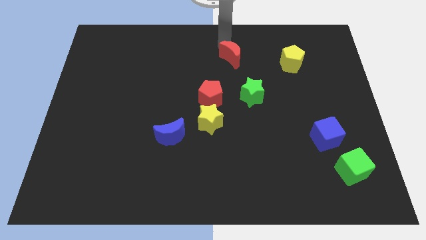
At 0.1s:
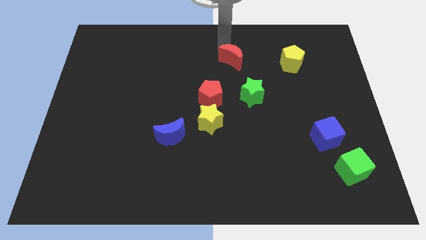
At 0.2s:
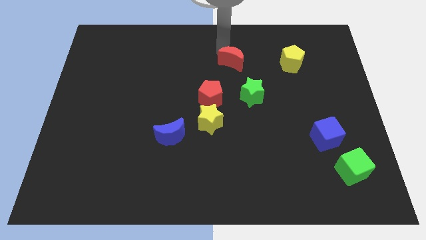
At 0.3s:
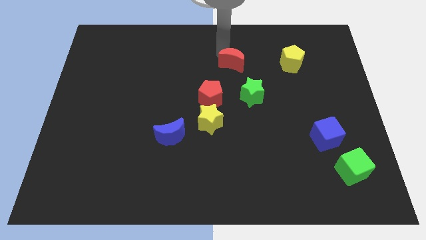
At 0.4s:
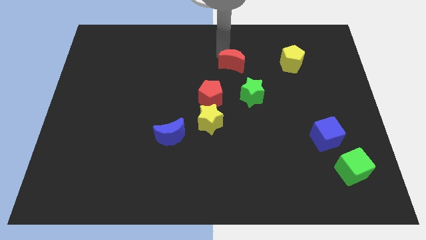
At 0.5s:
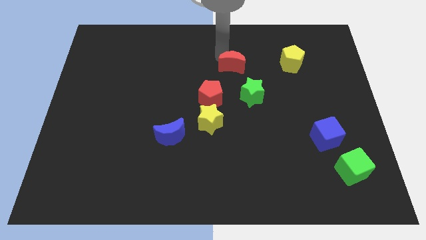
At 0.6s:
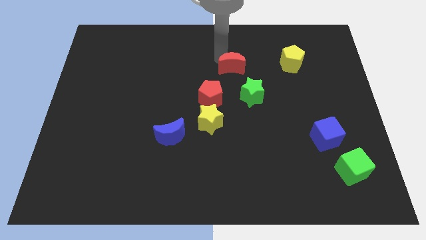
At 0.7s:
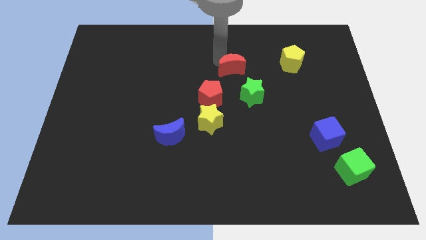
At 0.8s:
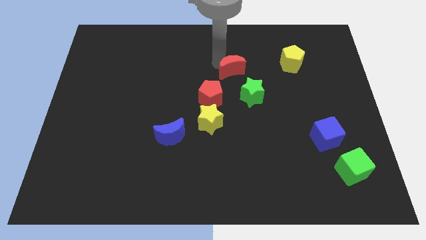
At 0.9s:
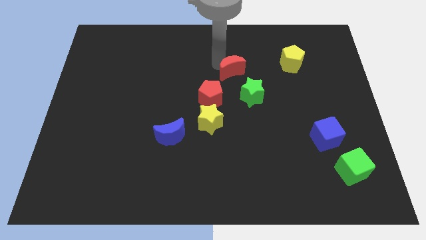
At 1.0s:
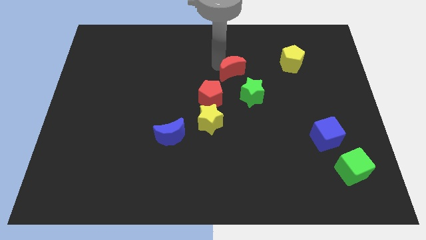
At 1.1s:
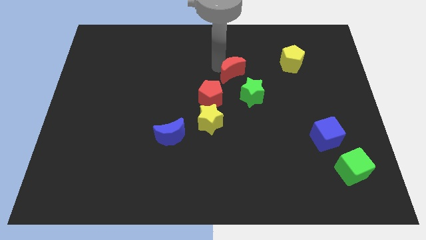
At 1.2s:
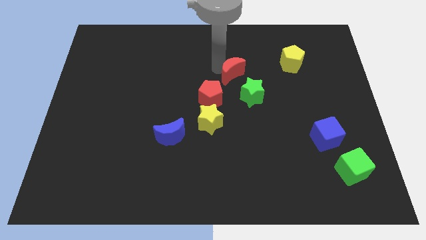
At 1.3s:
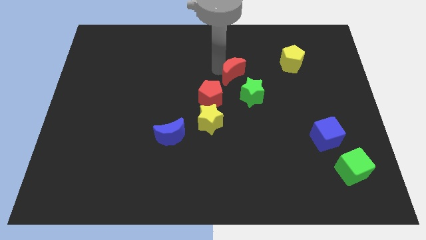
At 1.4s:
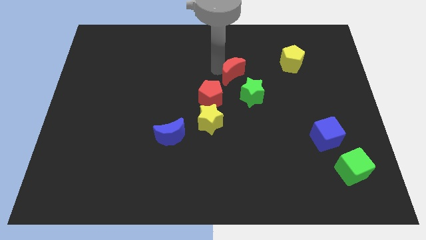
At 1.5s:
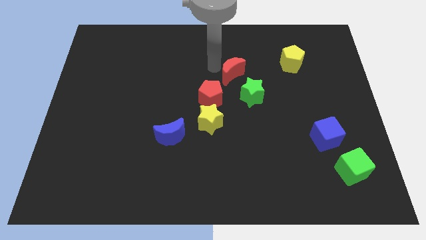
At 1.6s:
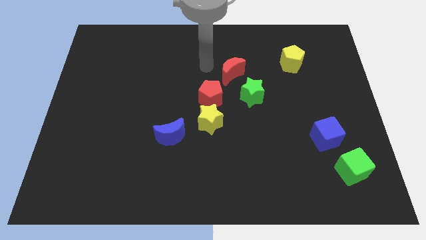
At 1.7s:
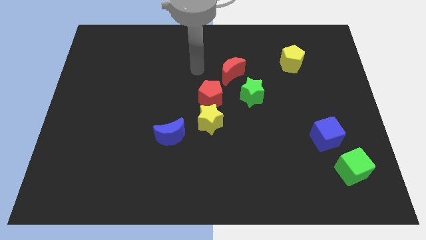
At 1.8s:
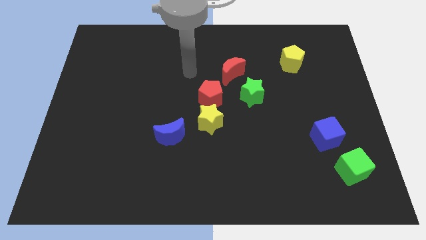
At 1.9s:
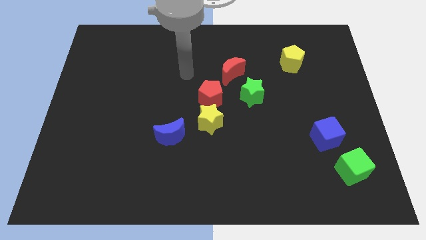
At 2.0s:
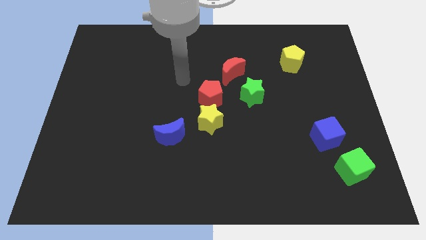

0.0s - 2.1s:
place the red moon diagonally on the top right side of the red pentagon

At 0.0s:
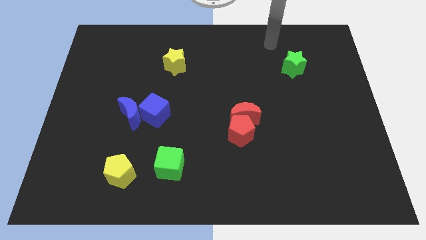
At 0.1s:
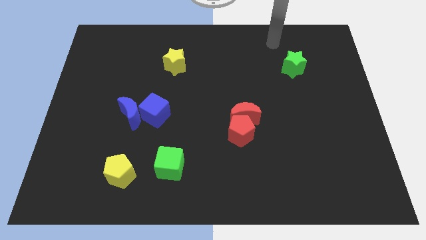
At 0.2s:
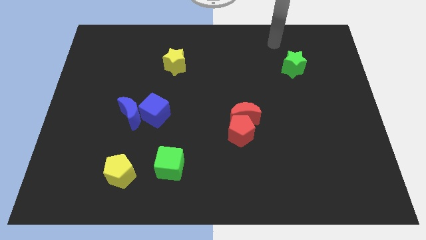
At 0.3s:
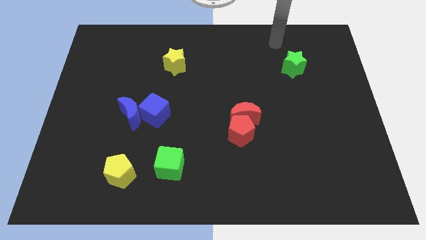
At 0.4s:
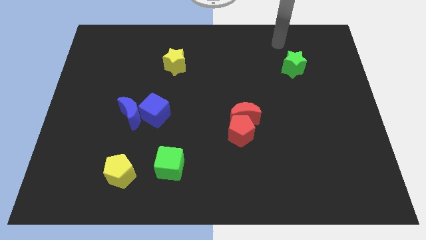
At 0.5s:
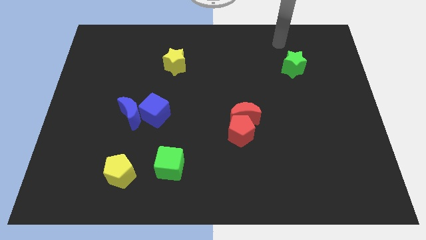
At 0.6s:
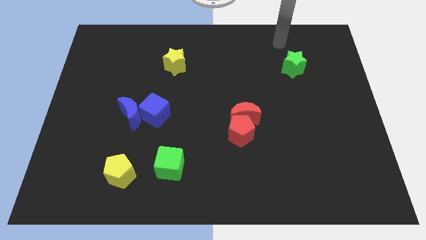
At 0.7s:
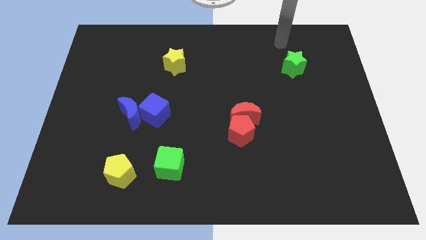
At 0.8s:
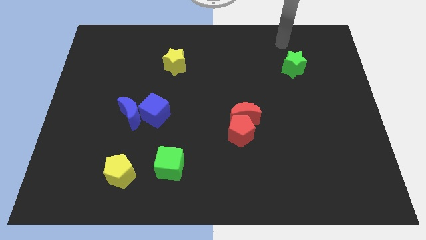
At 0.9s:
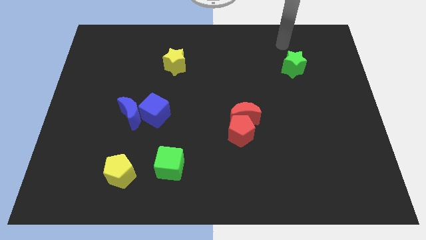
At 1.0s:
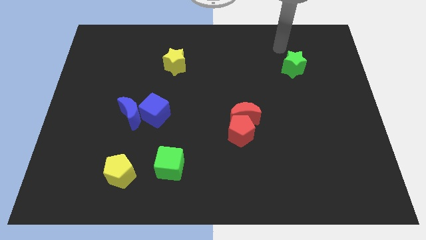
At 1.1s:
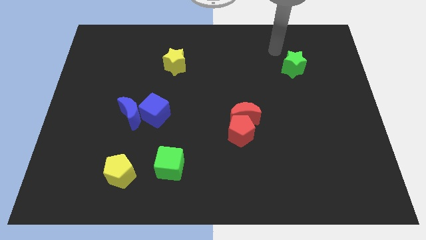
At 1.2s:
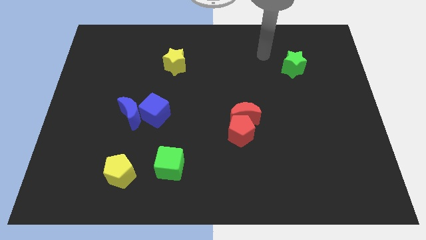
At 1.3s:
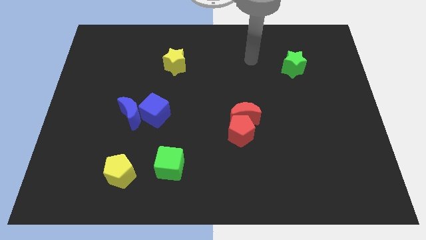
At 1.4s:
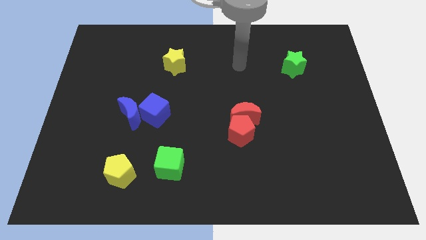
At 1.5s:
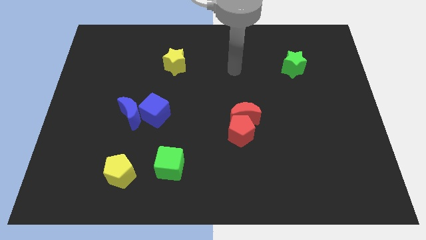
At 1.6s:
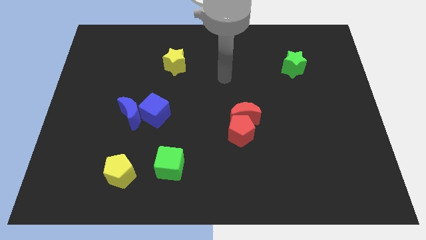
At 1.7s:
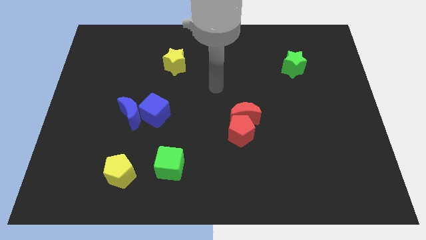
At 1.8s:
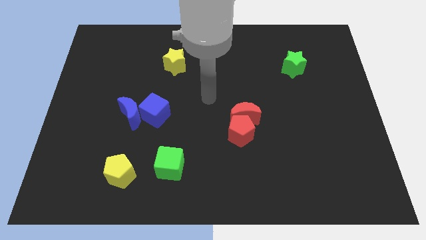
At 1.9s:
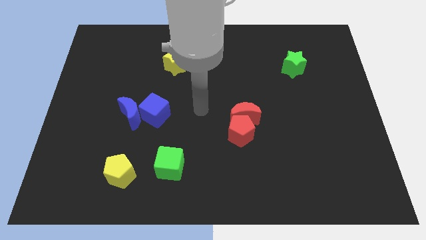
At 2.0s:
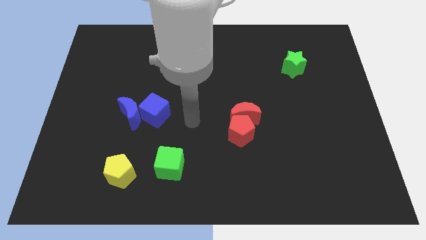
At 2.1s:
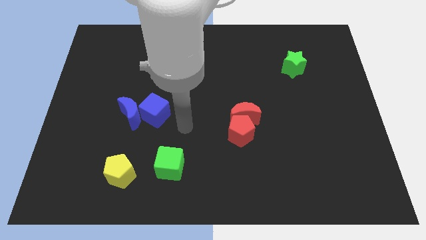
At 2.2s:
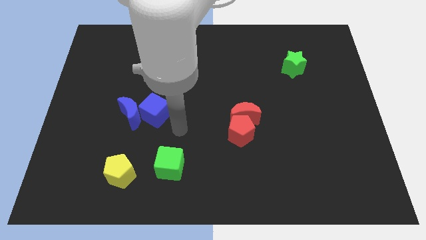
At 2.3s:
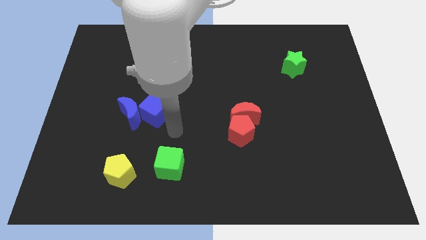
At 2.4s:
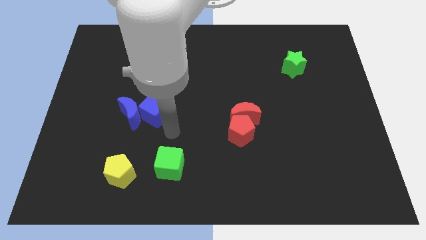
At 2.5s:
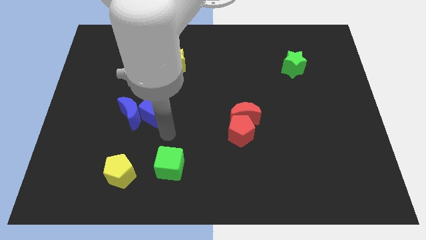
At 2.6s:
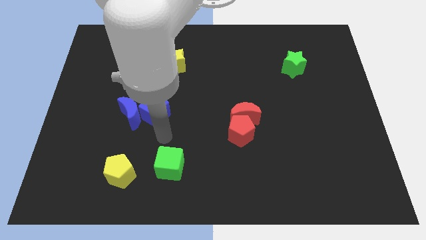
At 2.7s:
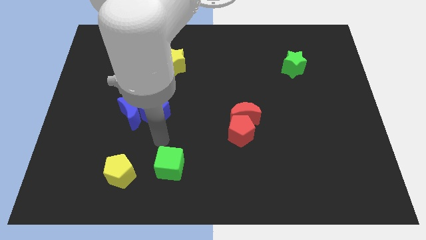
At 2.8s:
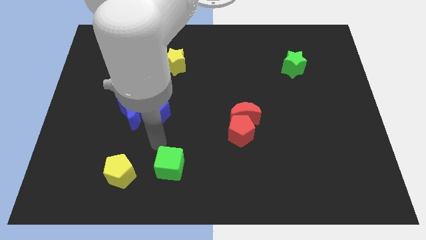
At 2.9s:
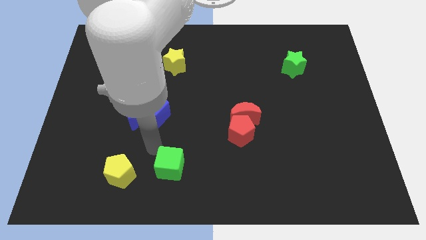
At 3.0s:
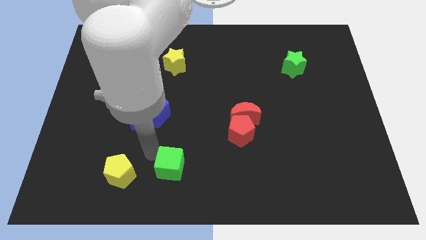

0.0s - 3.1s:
slide your hand to the left of green cube

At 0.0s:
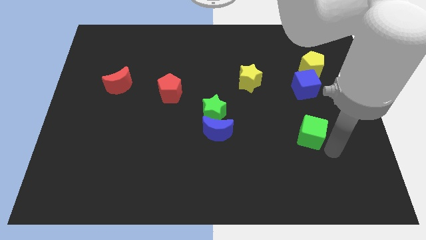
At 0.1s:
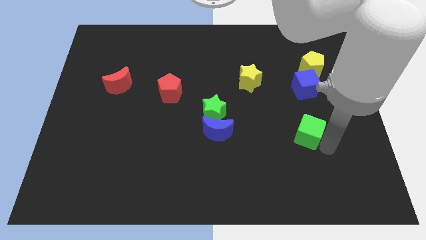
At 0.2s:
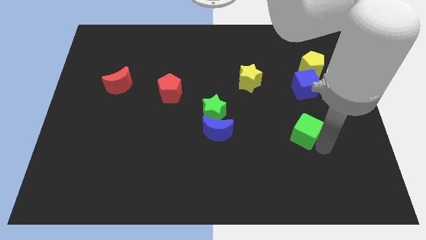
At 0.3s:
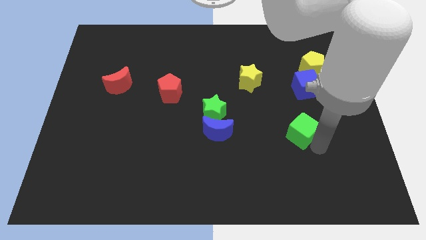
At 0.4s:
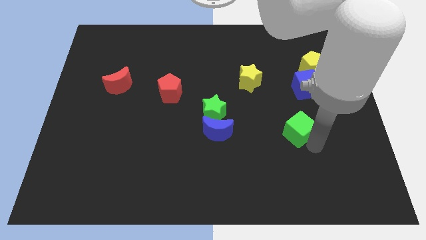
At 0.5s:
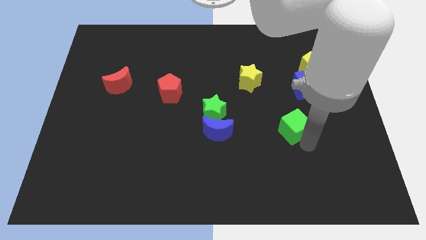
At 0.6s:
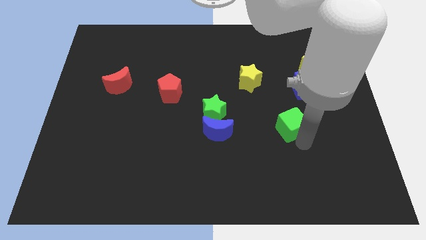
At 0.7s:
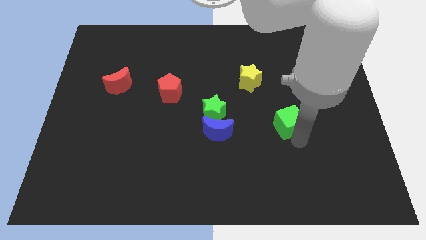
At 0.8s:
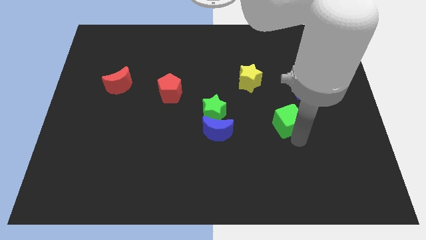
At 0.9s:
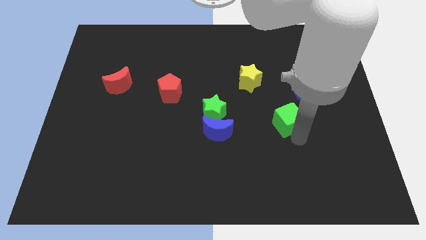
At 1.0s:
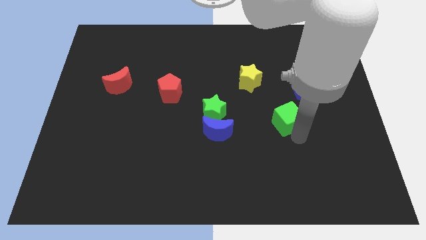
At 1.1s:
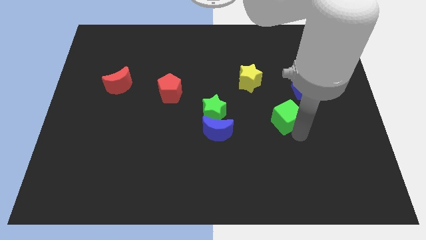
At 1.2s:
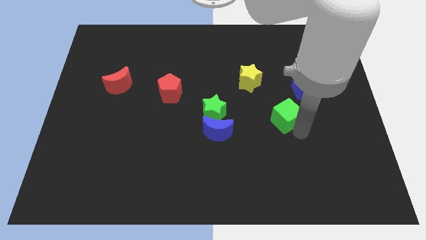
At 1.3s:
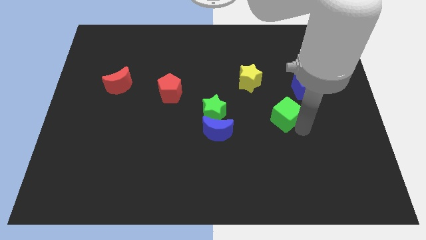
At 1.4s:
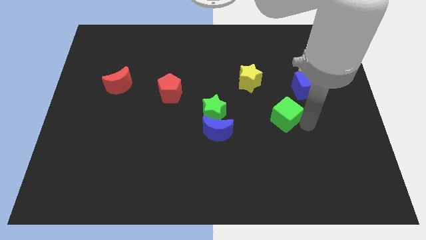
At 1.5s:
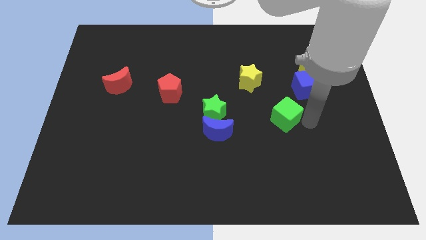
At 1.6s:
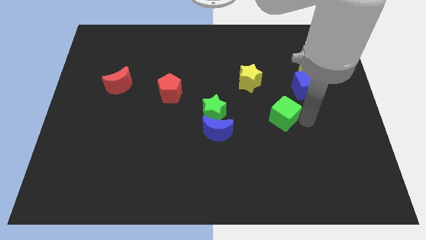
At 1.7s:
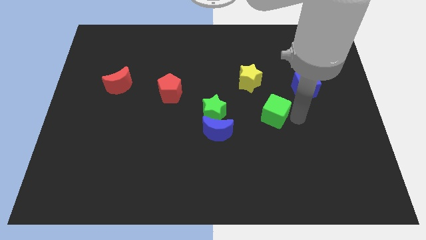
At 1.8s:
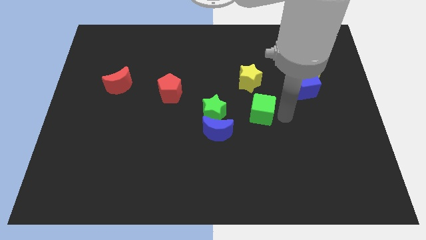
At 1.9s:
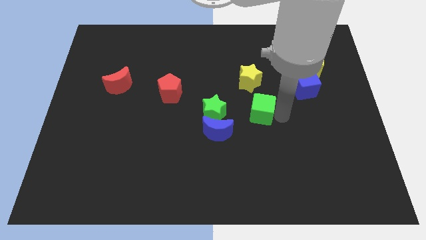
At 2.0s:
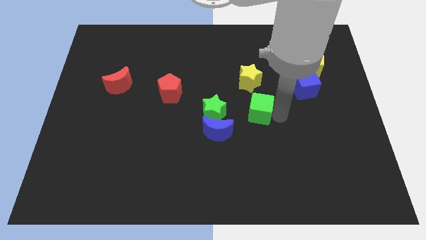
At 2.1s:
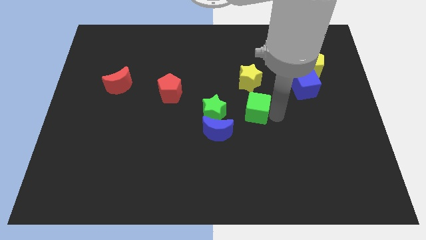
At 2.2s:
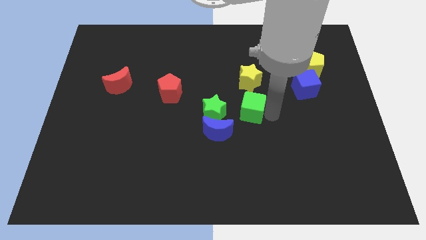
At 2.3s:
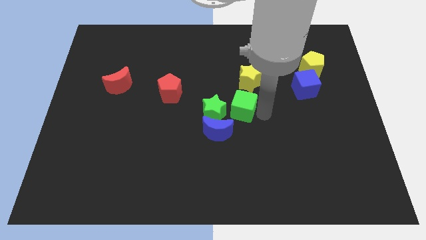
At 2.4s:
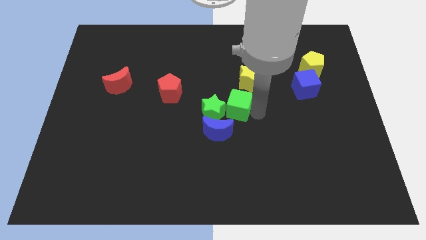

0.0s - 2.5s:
push the green cube to the bottom of the yellow star

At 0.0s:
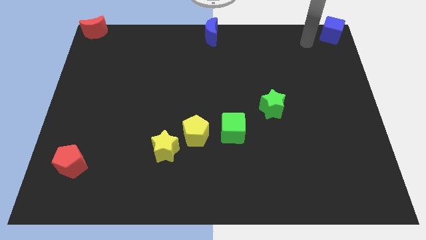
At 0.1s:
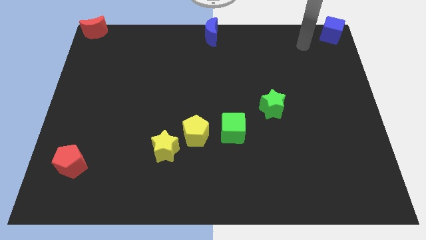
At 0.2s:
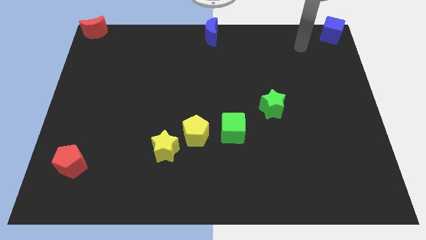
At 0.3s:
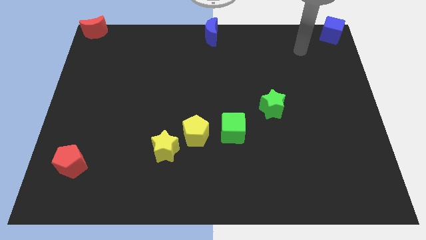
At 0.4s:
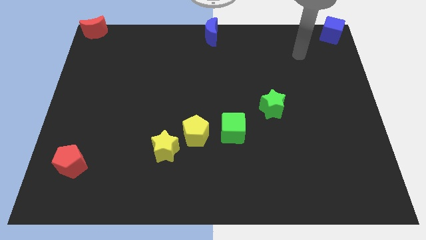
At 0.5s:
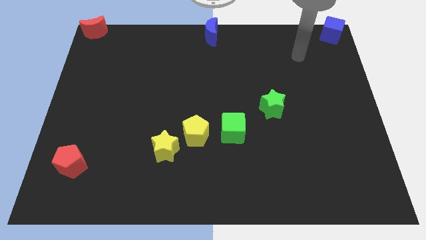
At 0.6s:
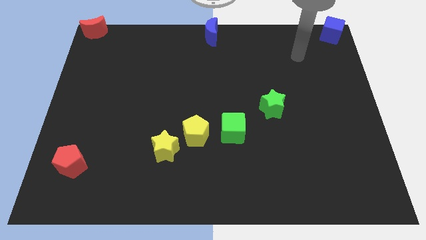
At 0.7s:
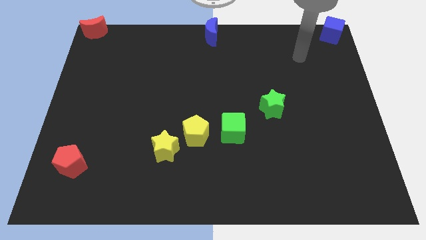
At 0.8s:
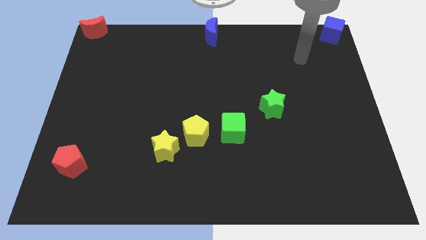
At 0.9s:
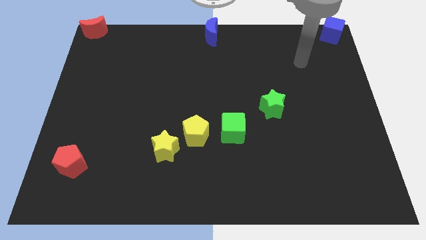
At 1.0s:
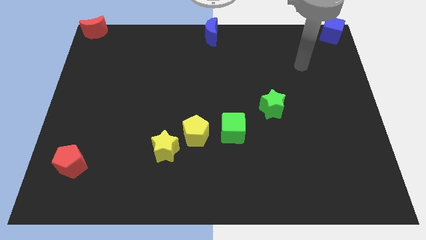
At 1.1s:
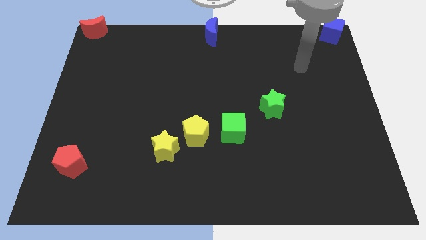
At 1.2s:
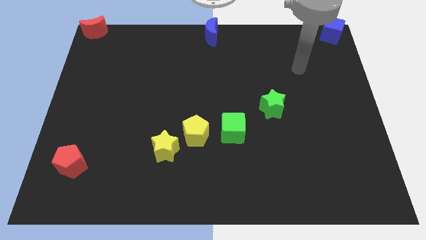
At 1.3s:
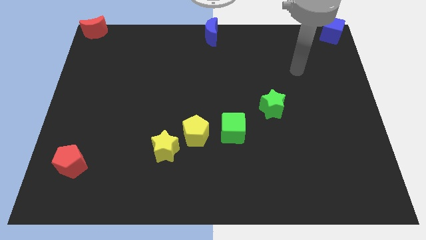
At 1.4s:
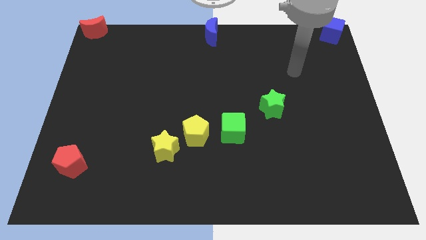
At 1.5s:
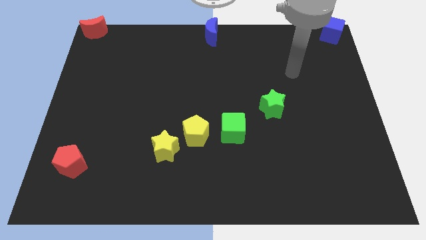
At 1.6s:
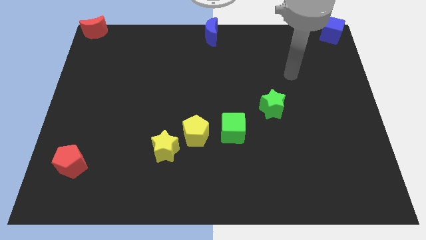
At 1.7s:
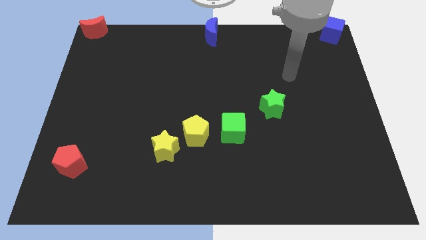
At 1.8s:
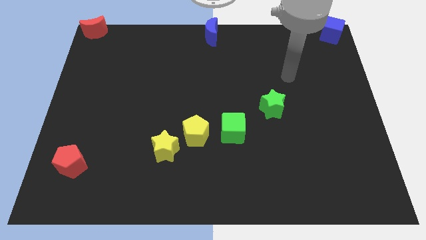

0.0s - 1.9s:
place your arm diagonally top right to the green star
